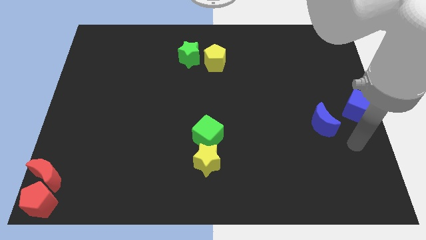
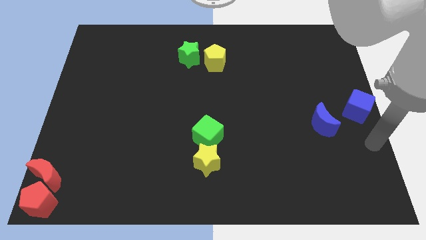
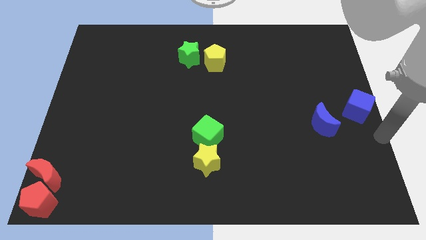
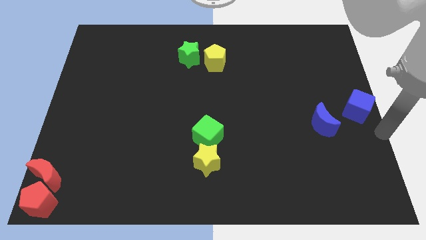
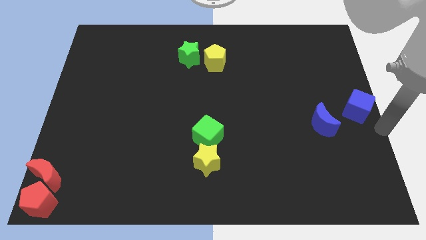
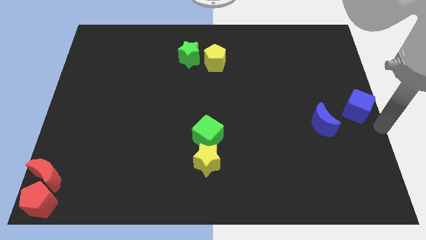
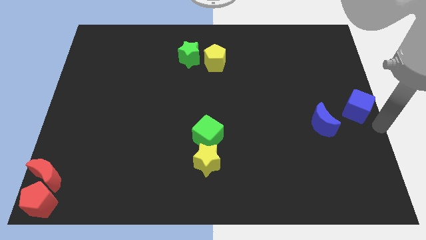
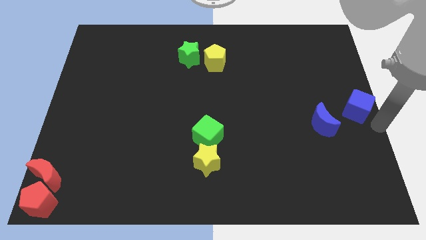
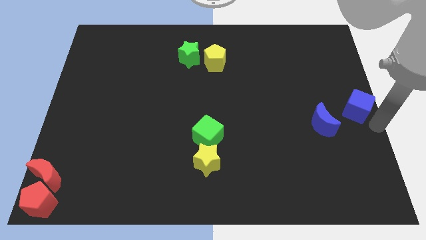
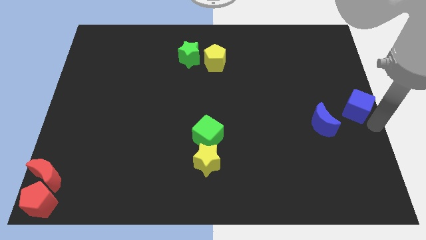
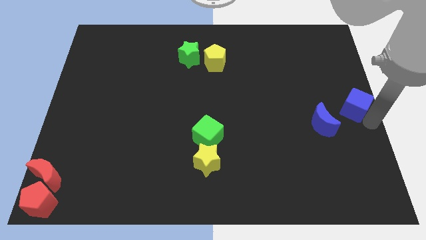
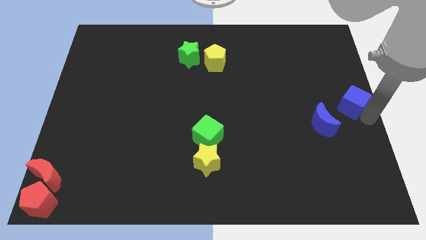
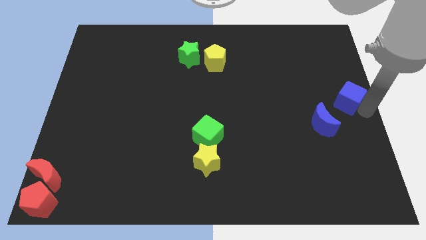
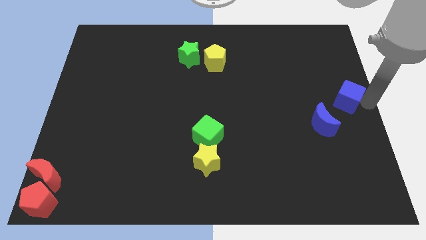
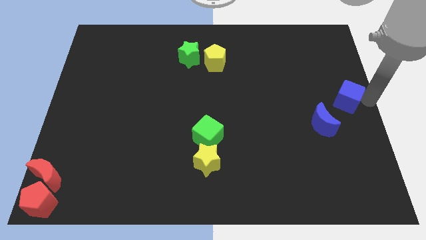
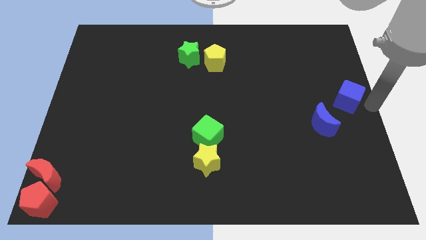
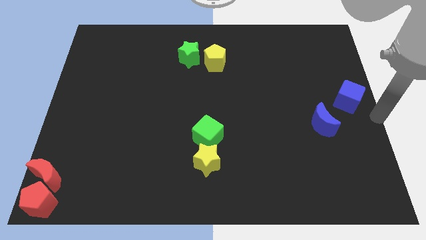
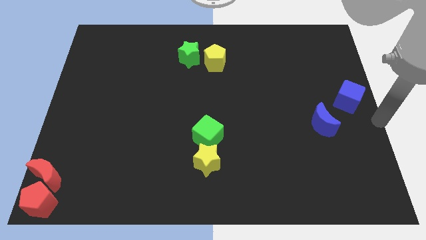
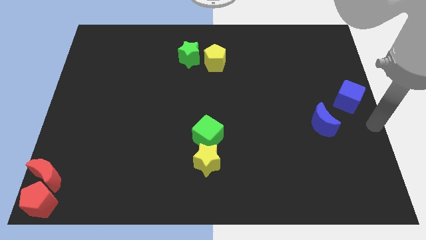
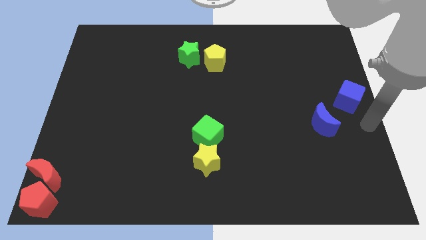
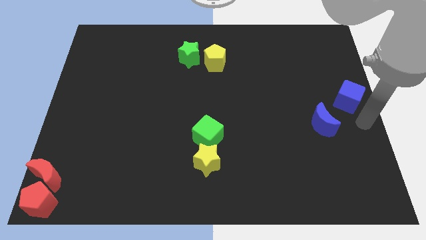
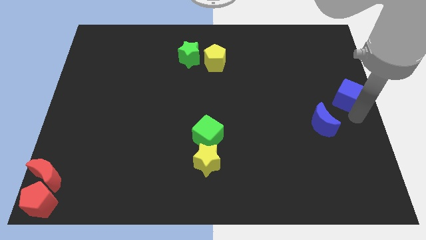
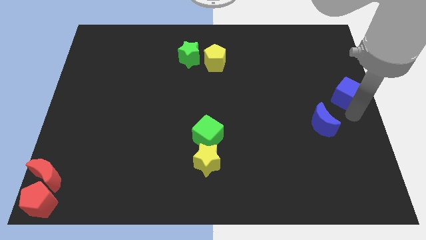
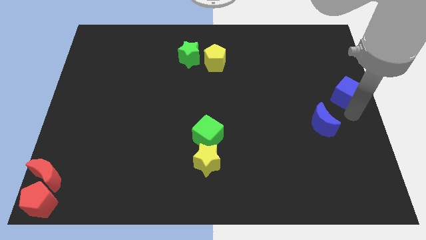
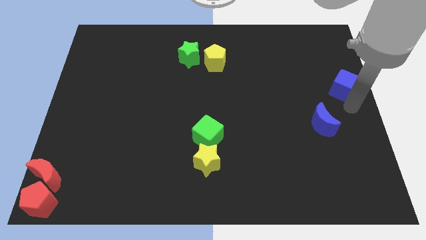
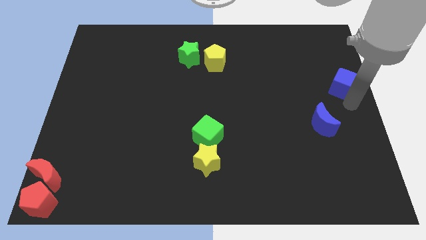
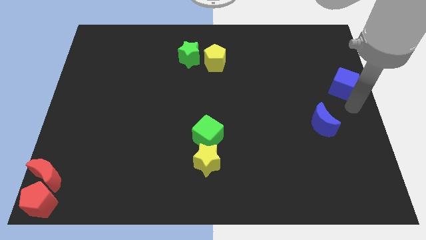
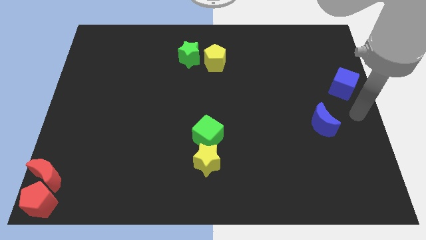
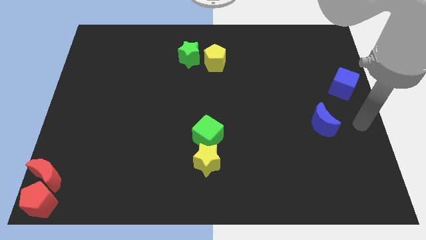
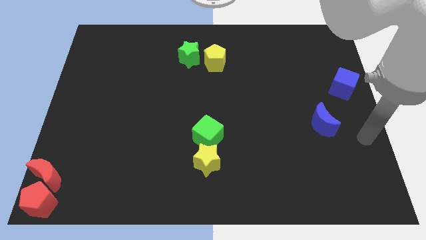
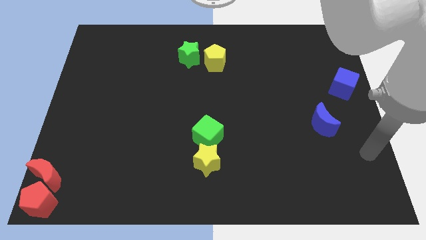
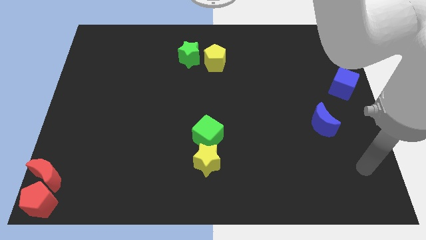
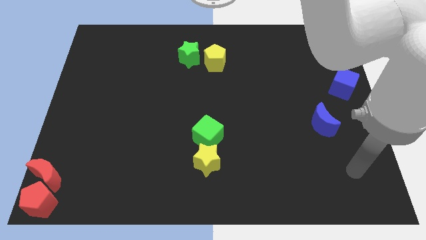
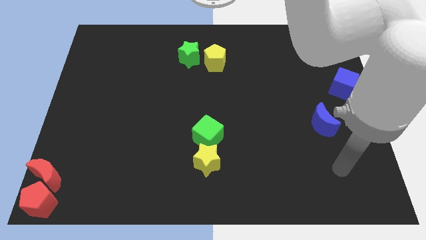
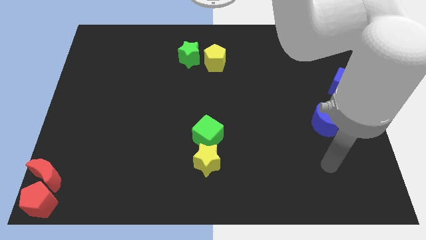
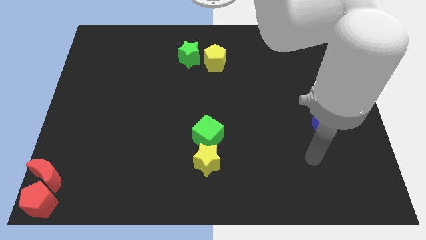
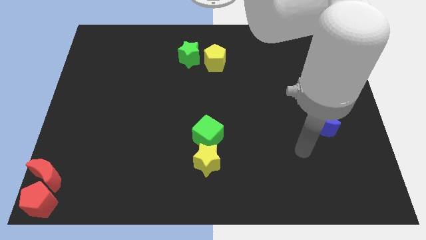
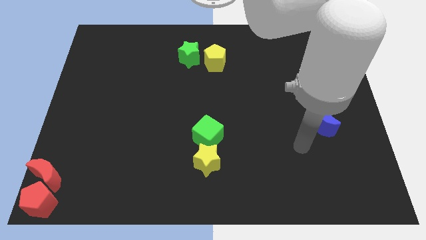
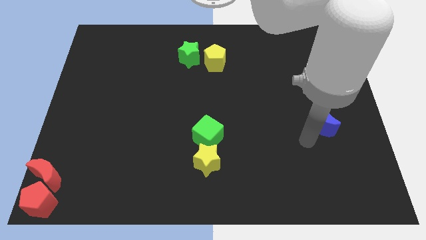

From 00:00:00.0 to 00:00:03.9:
slightly move the blue cube upwards

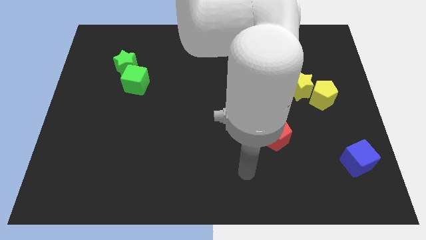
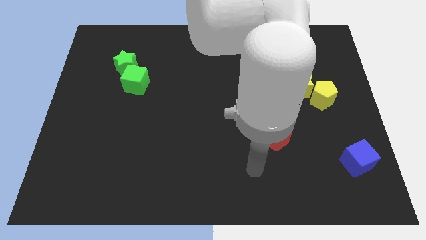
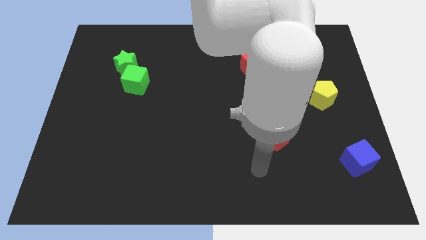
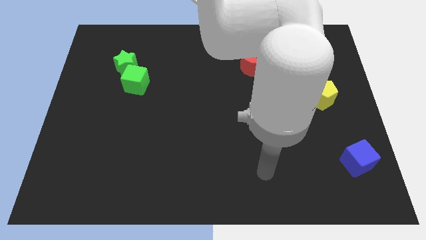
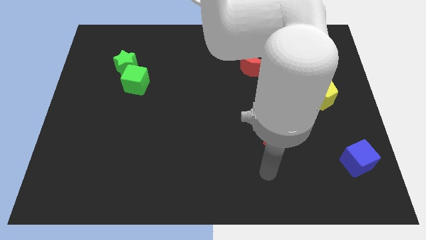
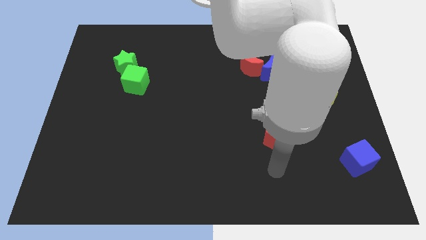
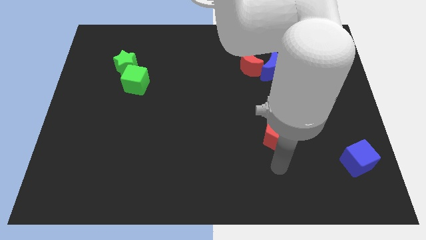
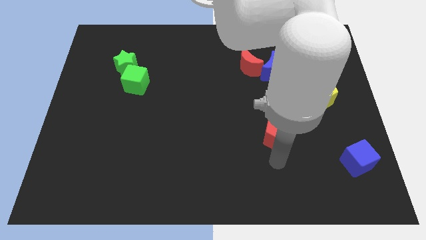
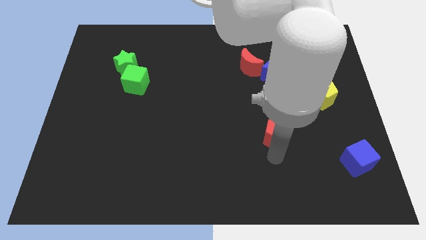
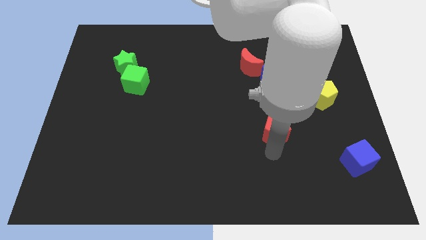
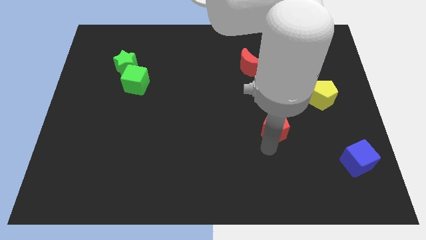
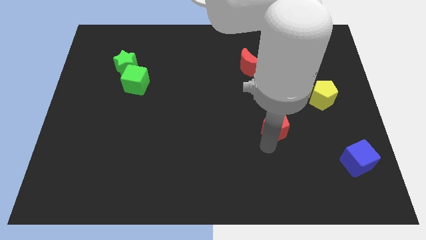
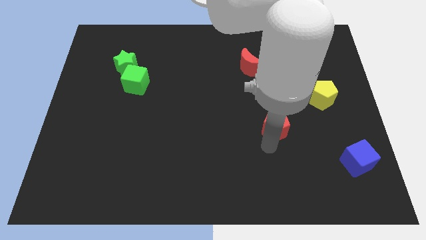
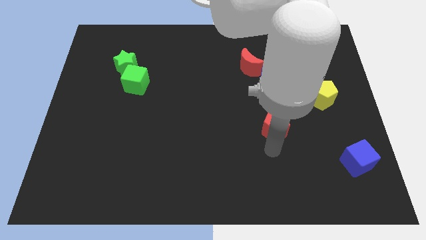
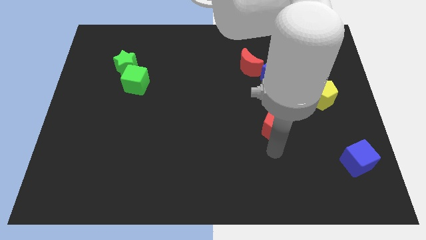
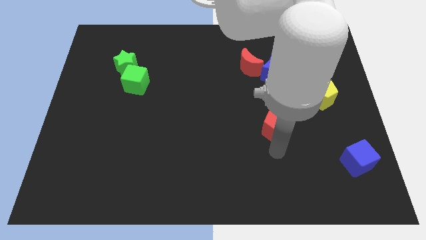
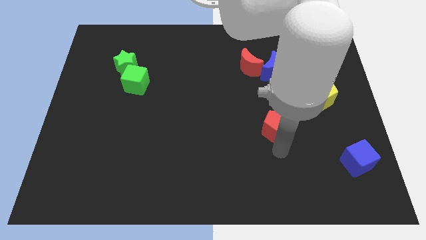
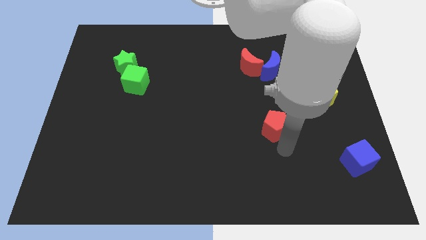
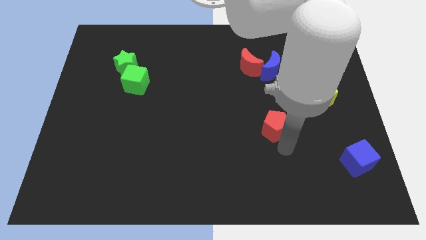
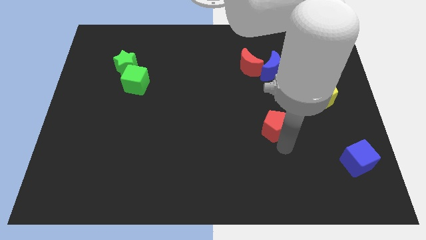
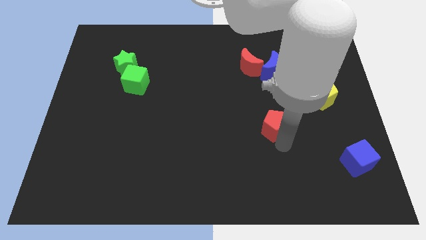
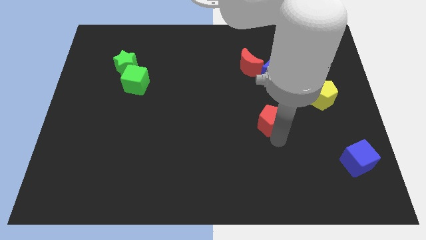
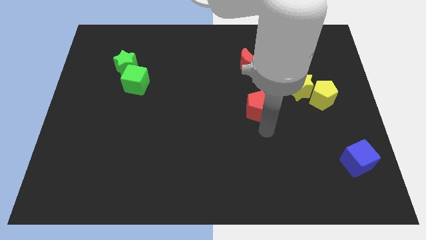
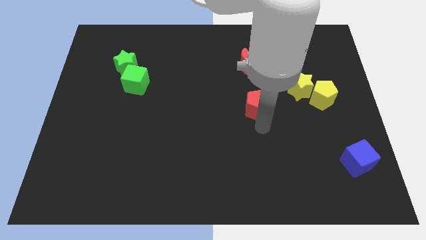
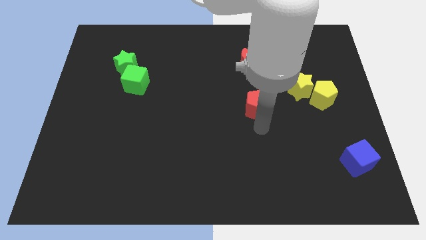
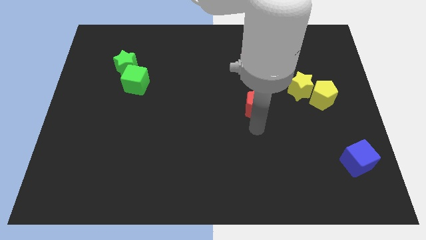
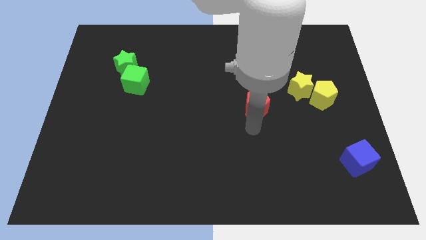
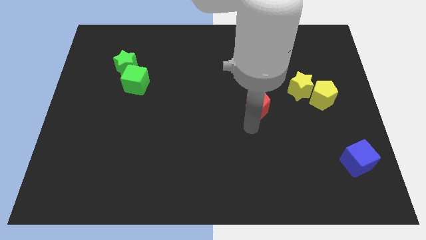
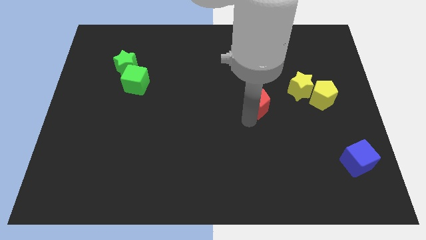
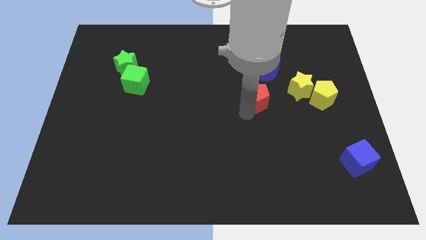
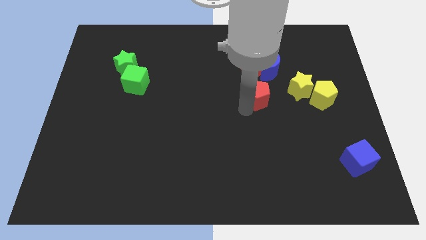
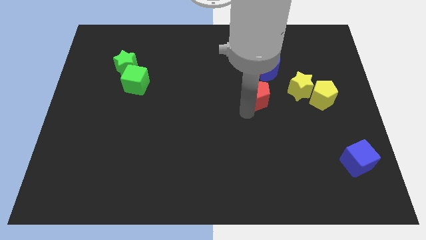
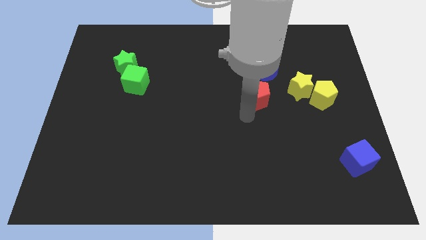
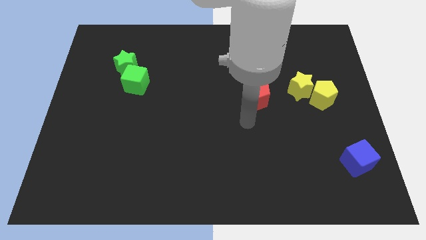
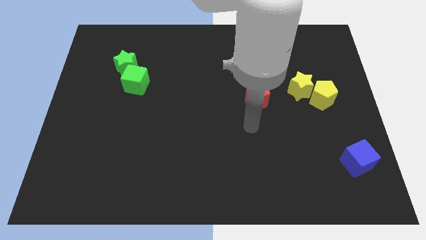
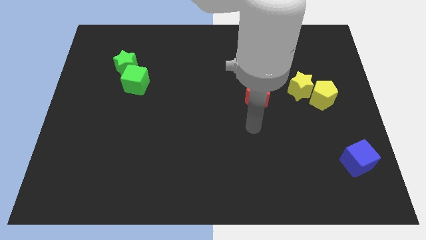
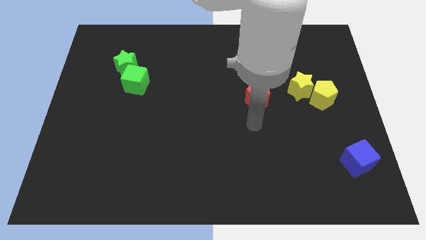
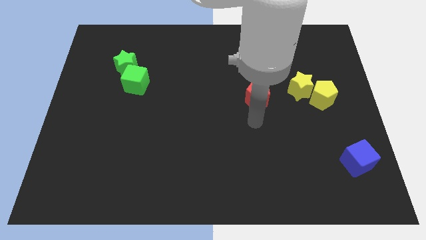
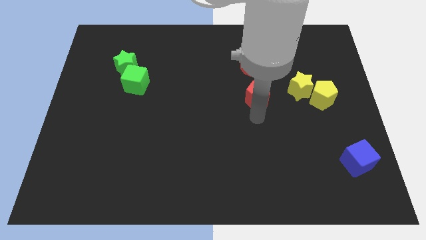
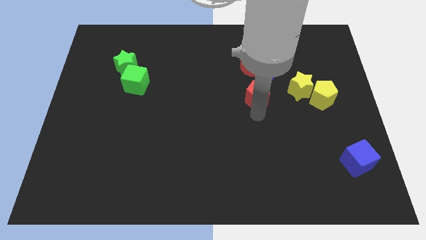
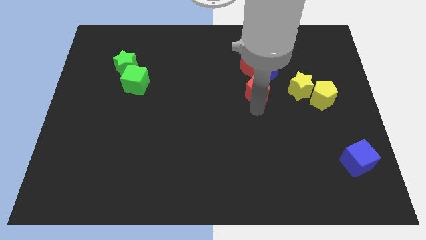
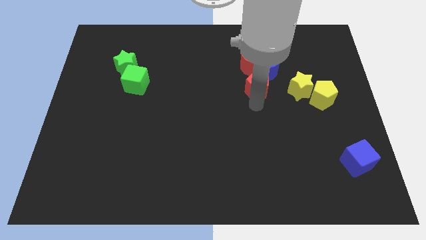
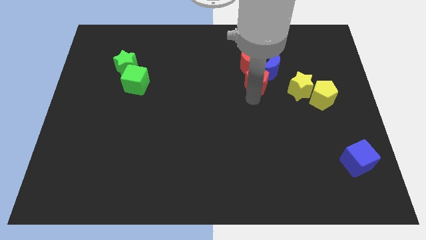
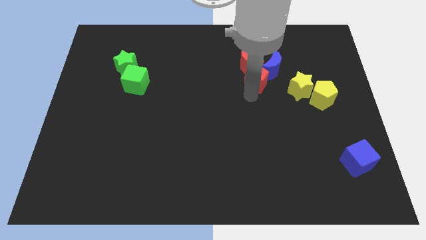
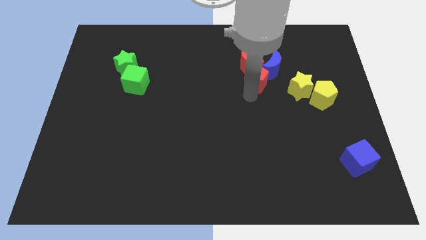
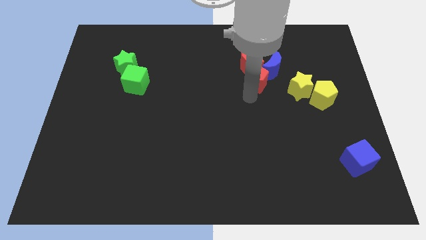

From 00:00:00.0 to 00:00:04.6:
put the red pentagon into the blue cube

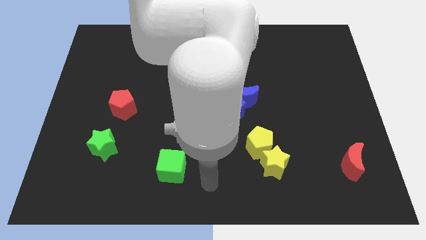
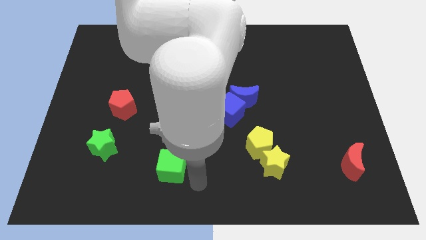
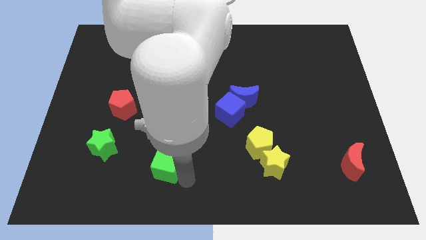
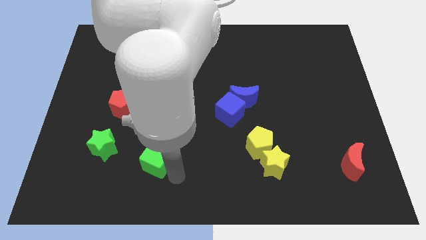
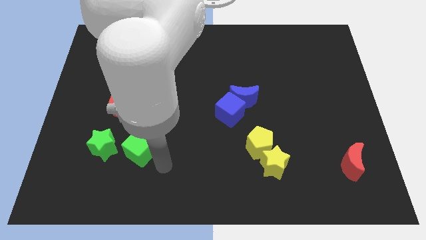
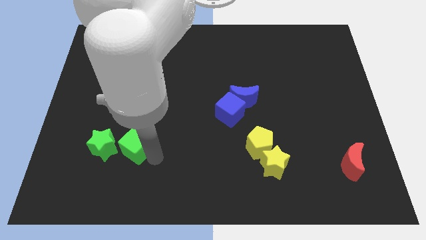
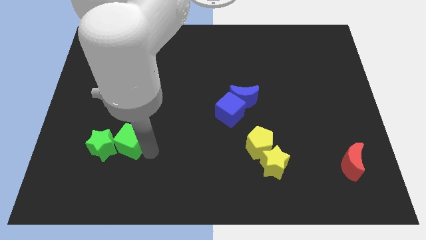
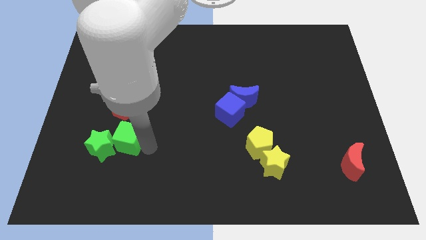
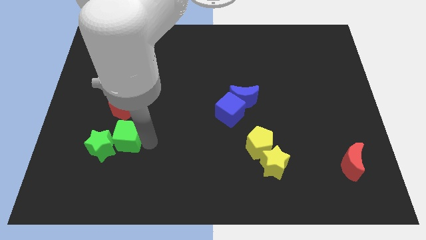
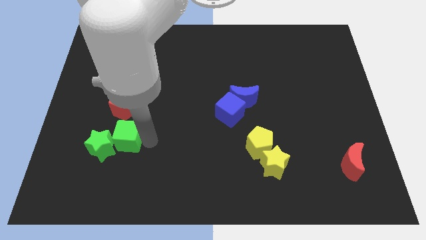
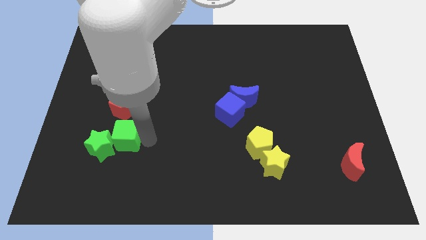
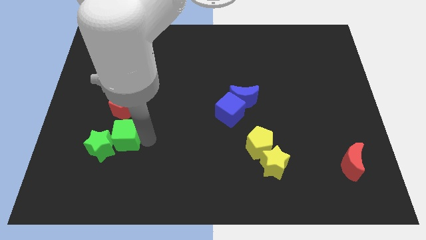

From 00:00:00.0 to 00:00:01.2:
push green cube to the right side of the green star
